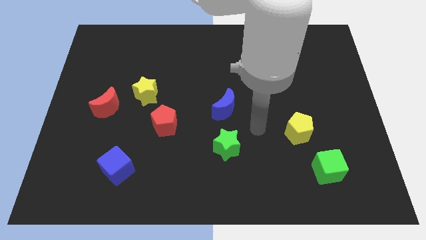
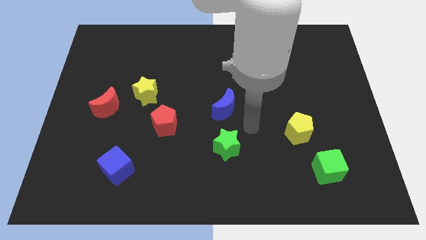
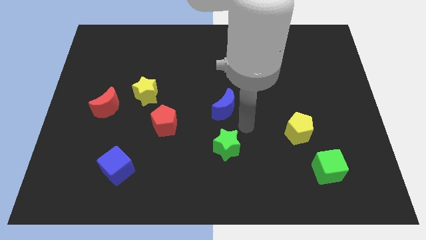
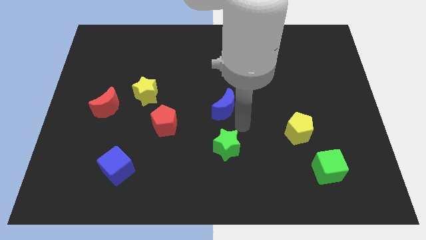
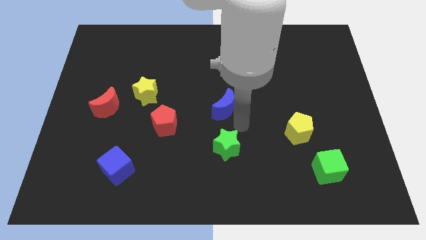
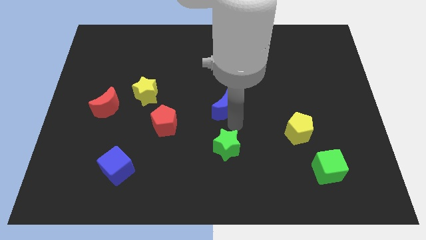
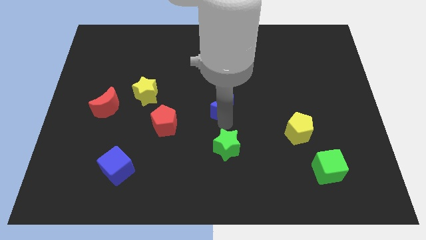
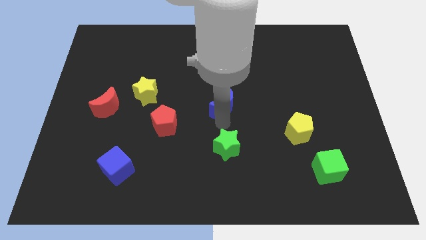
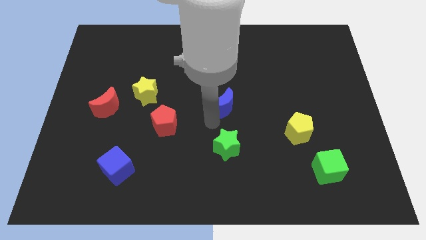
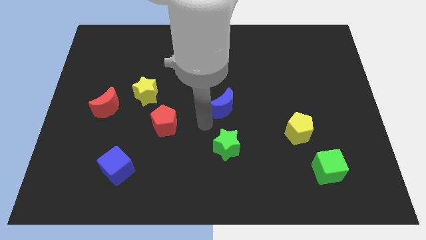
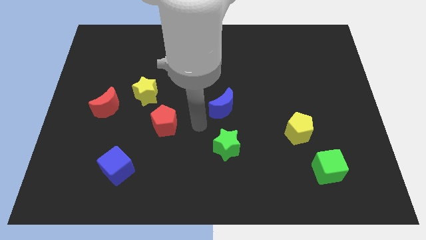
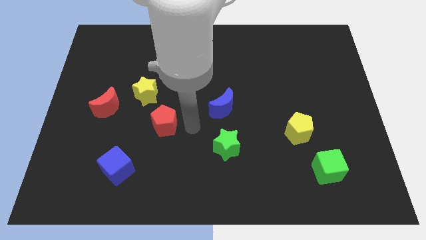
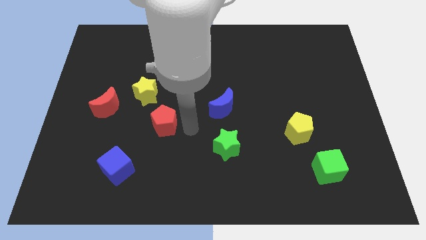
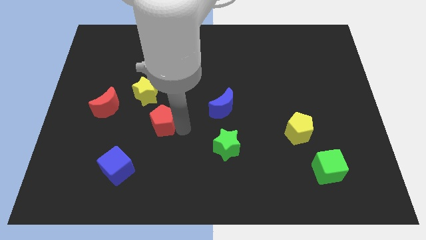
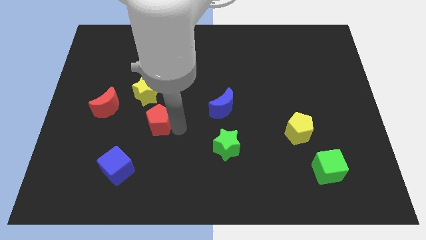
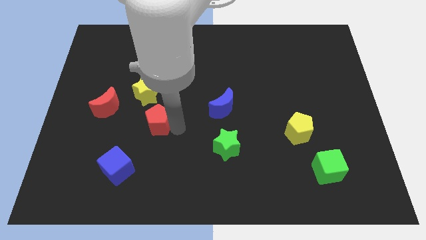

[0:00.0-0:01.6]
touch the bottom of blue moon and red pentagon

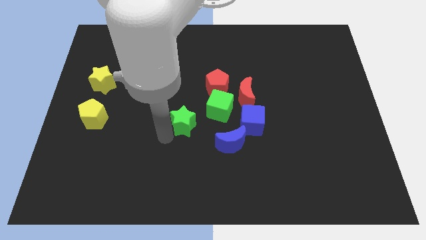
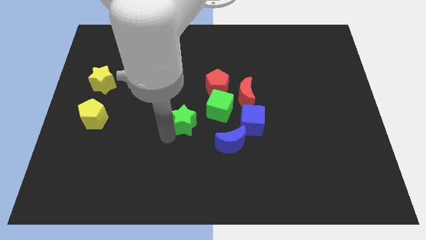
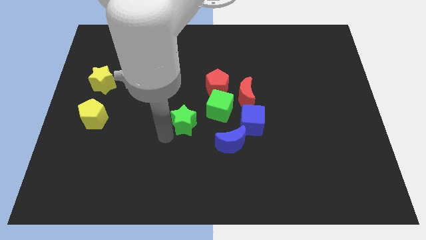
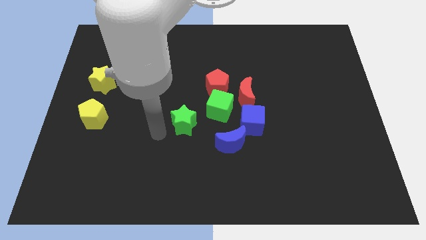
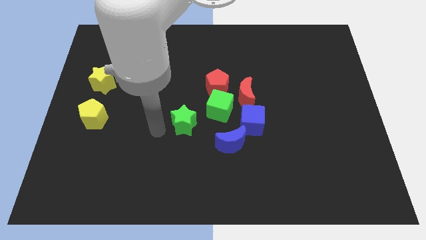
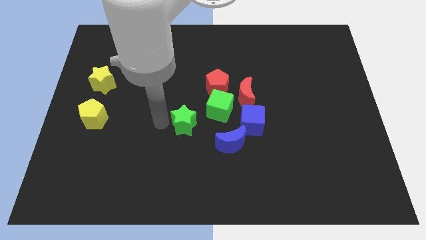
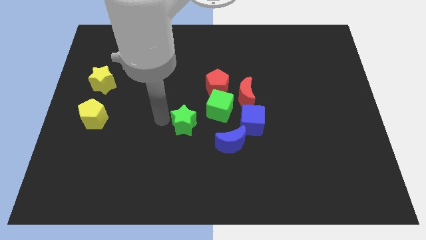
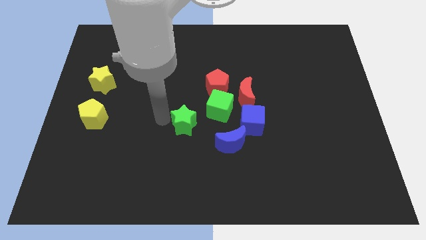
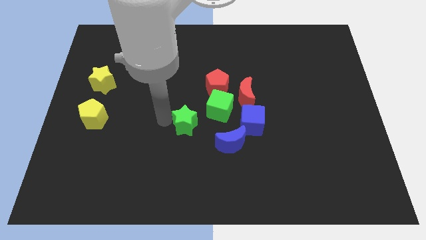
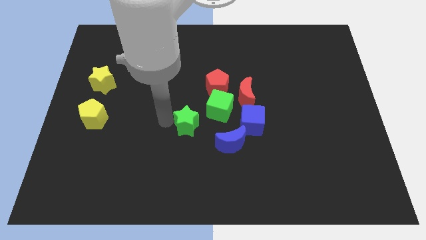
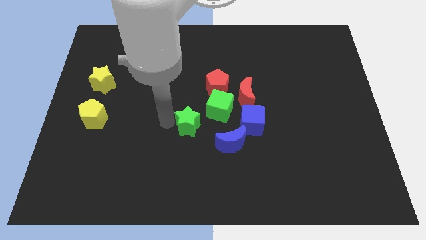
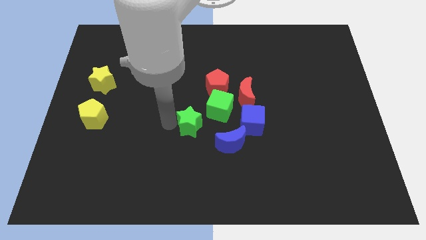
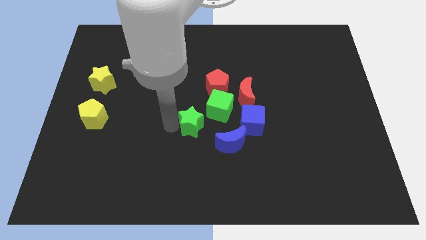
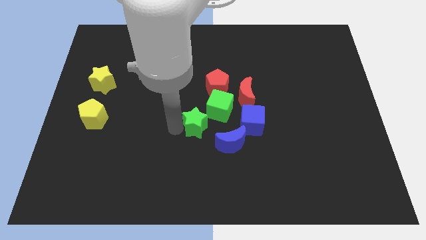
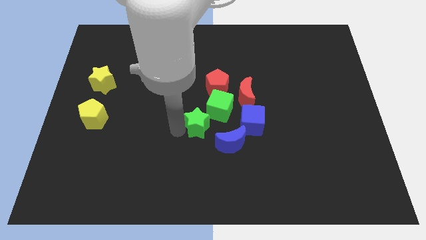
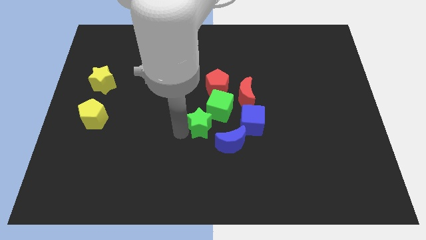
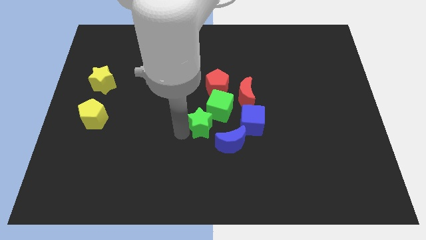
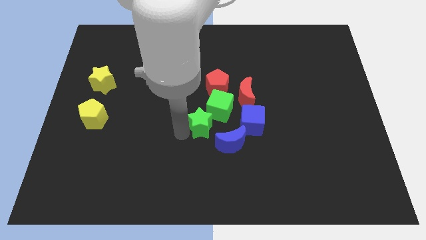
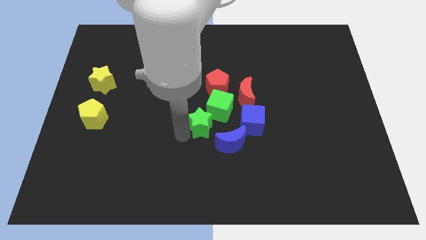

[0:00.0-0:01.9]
move the green star to the bottom left side of the green cube

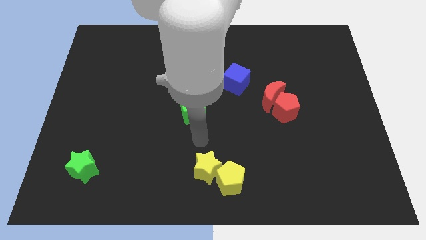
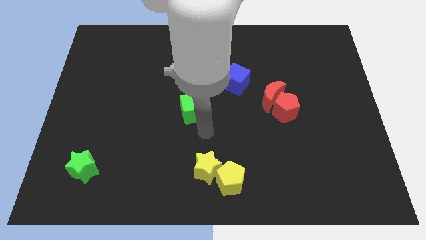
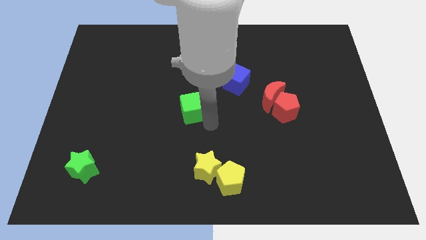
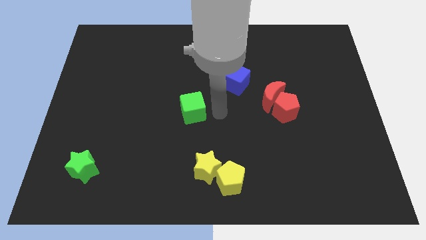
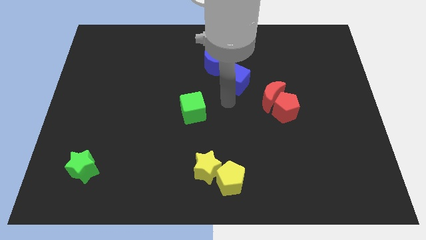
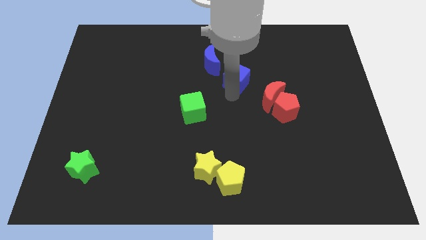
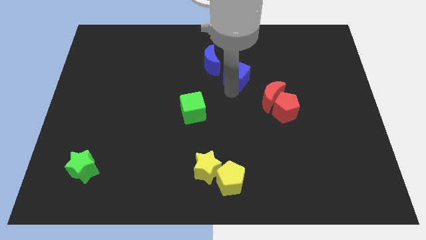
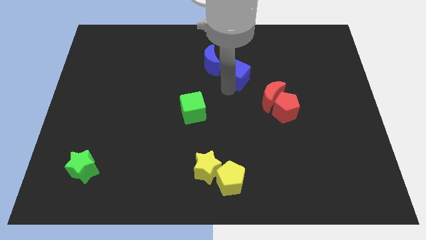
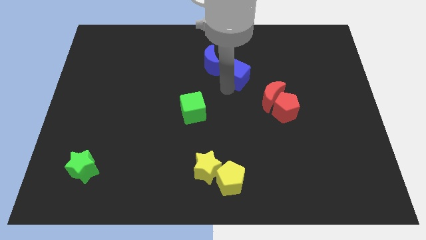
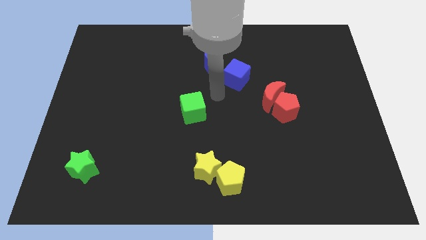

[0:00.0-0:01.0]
slightly move the blue cube upwards

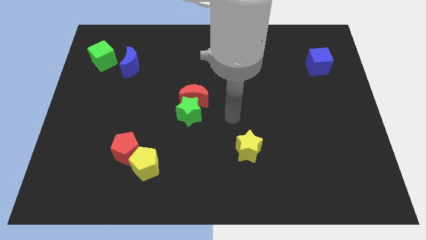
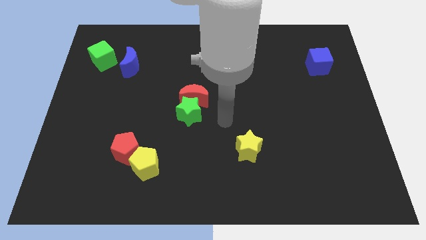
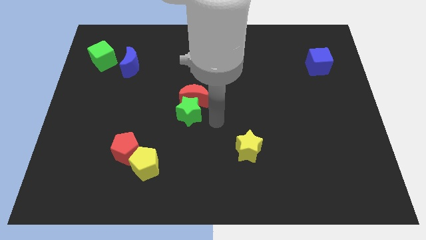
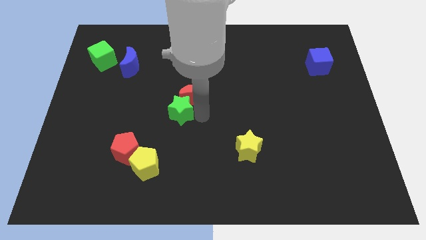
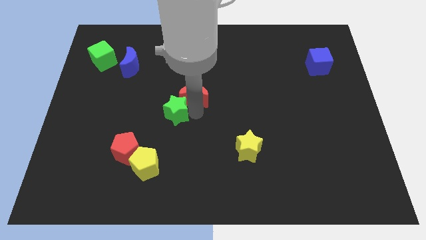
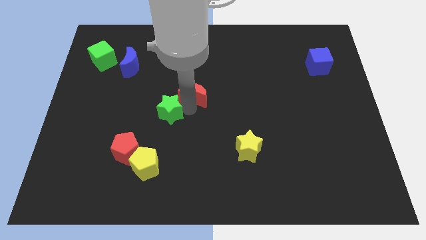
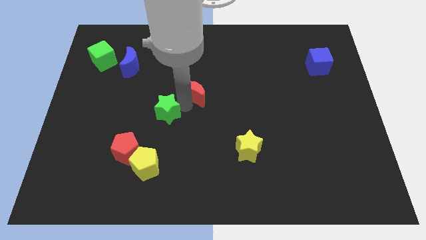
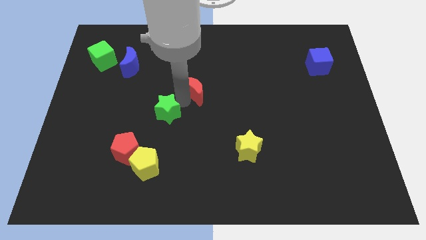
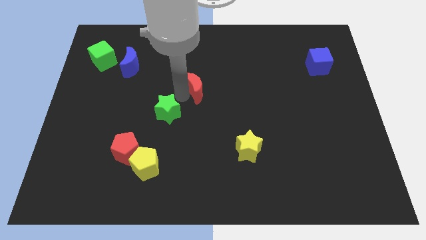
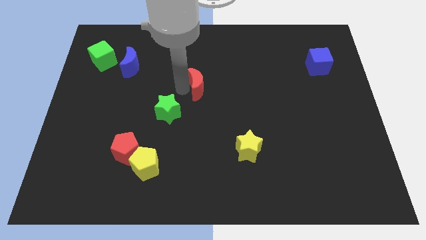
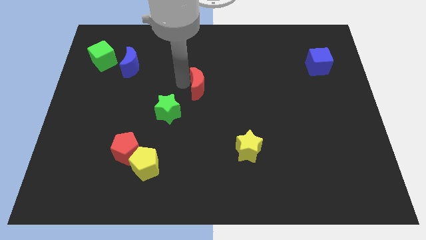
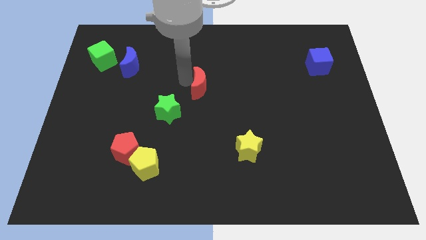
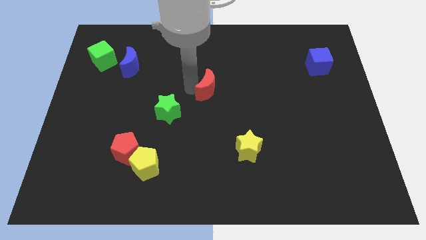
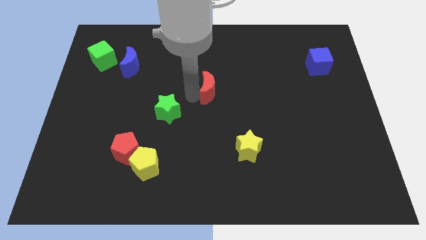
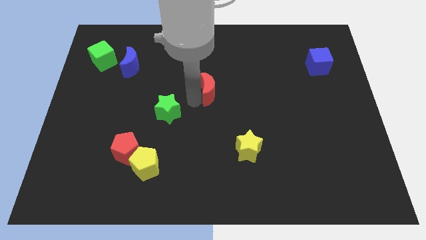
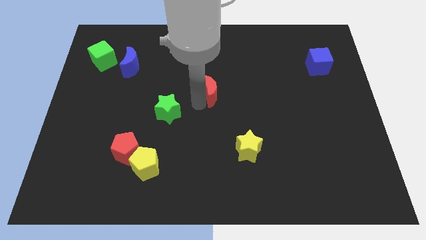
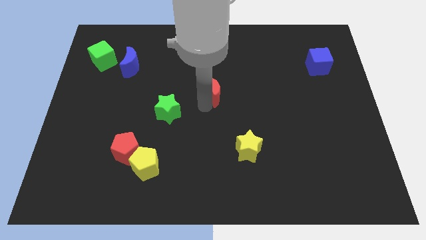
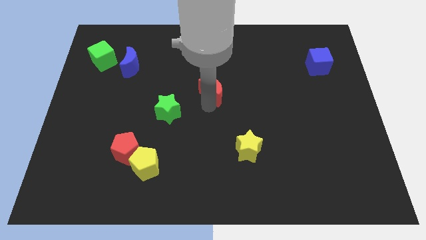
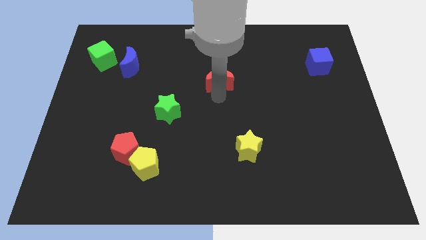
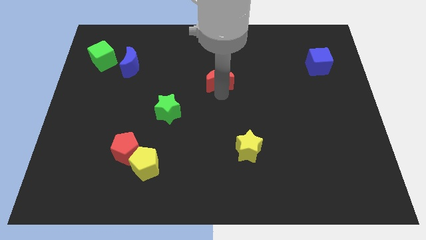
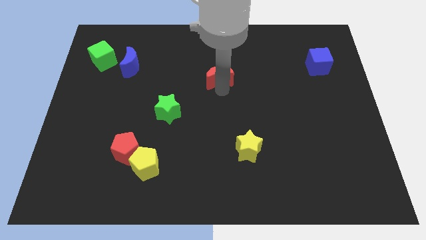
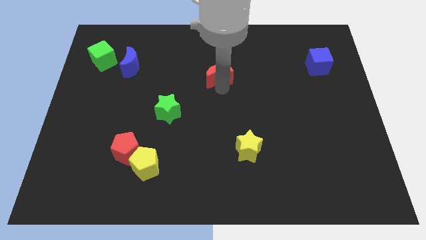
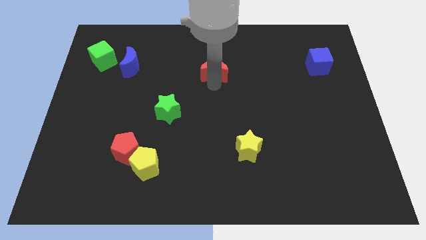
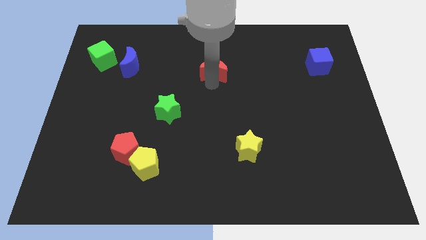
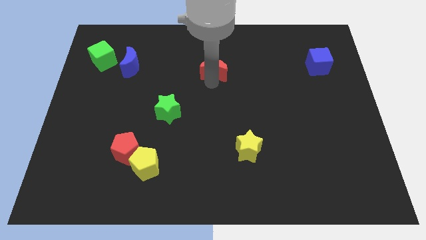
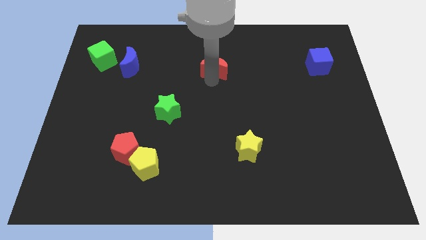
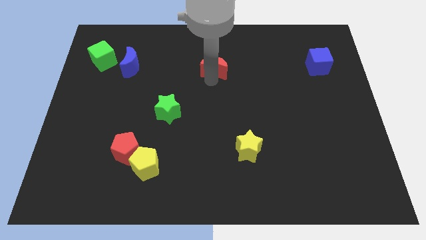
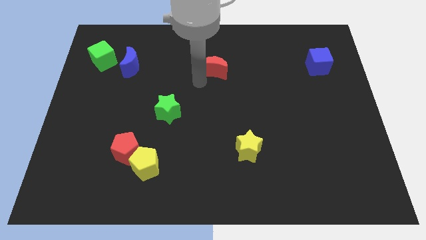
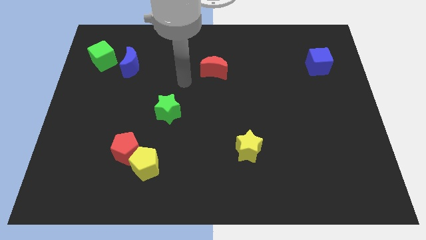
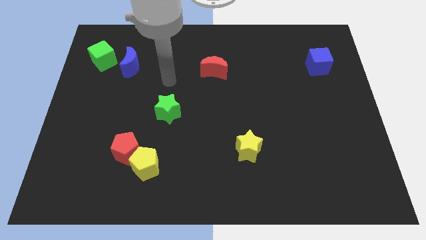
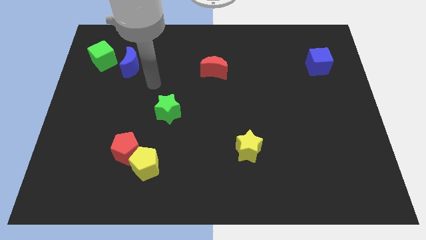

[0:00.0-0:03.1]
separate the red moon from the green star

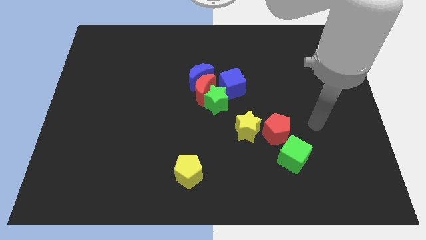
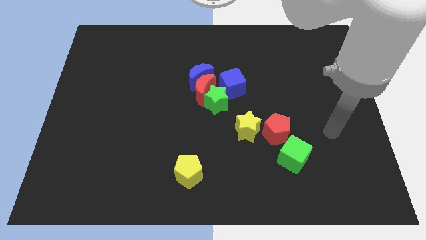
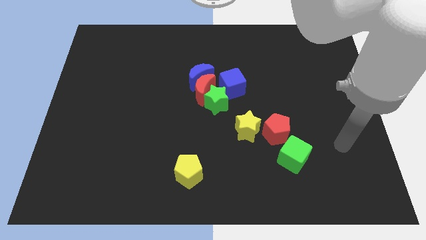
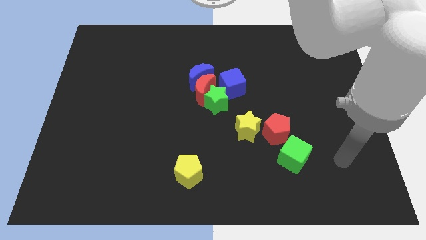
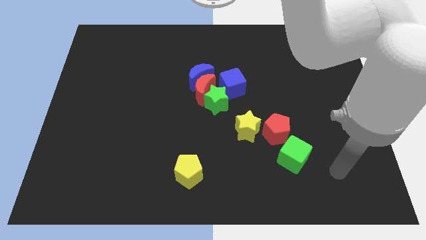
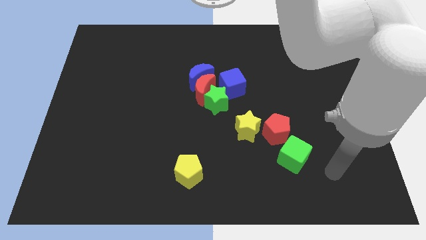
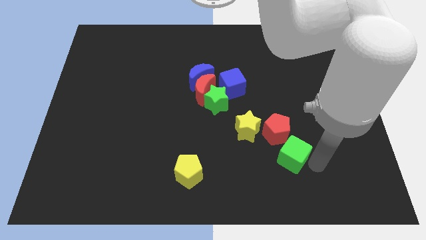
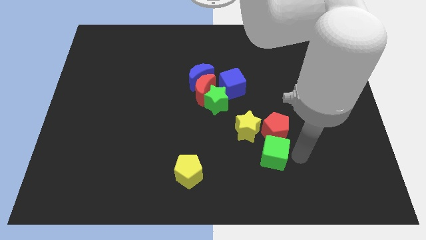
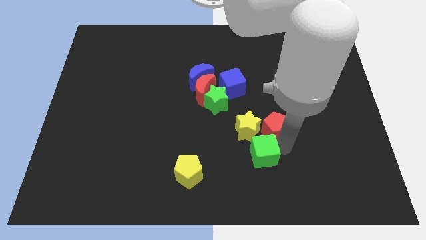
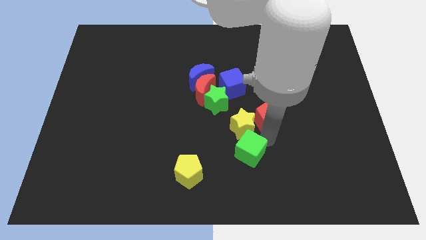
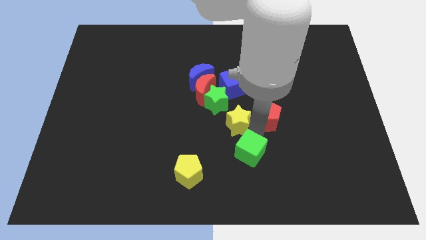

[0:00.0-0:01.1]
place green cube below yellow star

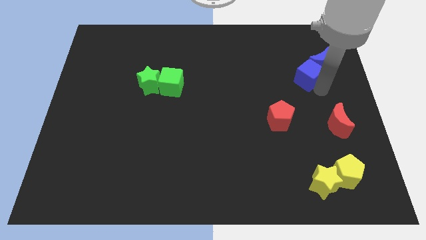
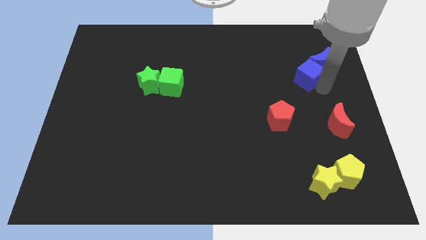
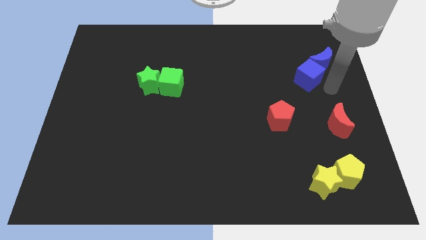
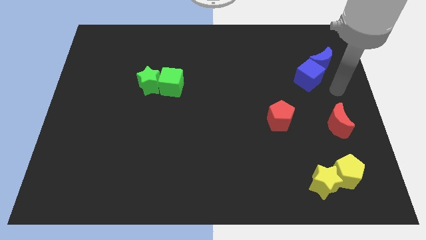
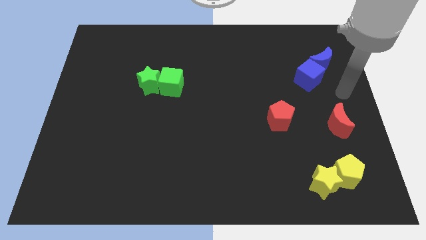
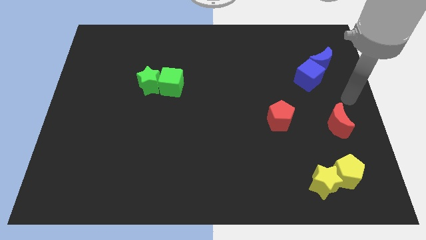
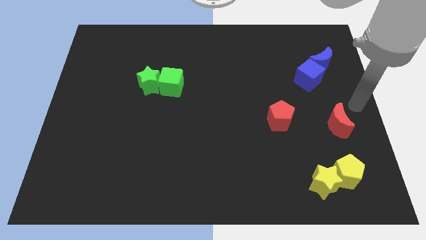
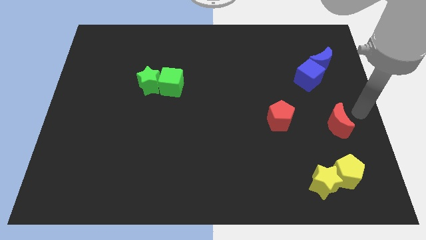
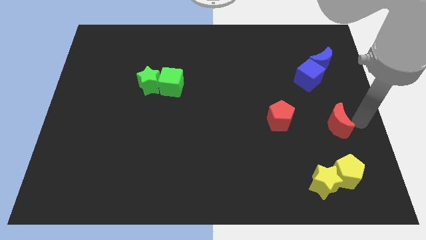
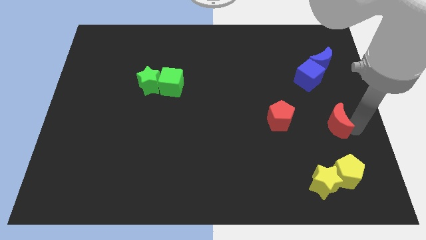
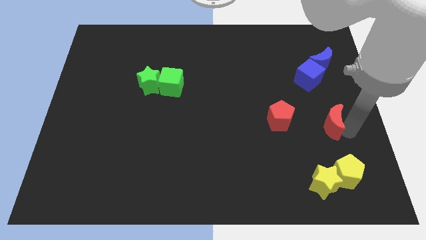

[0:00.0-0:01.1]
move your hand towards the red crescent
